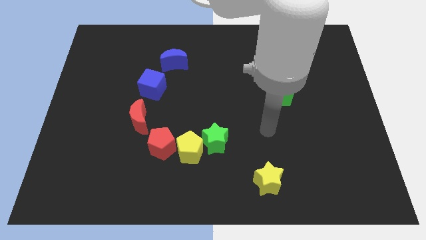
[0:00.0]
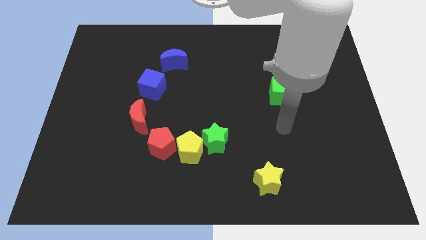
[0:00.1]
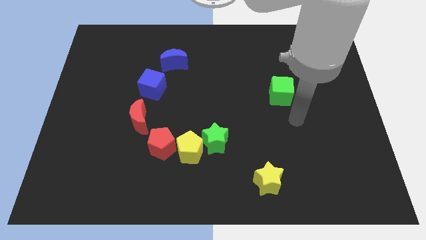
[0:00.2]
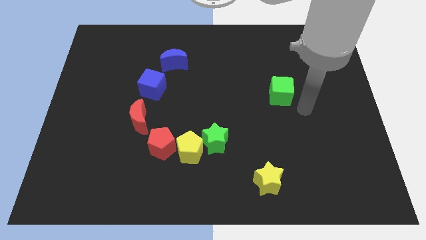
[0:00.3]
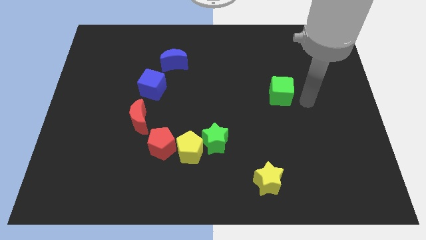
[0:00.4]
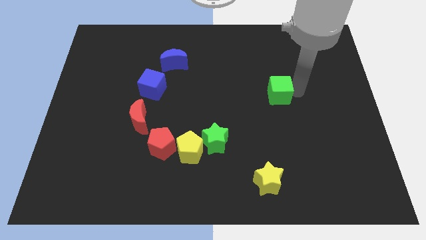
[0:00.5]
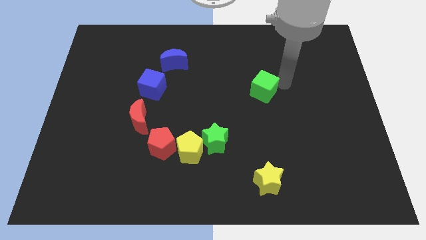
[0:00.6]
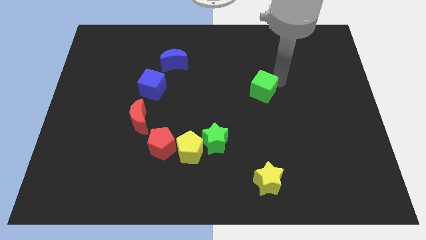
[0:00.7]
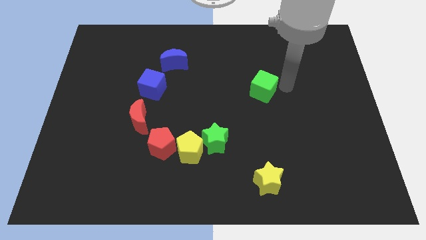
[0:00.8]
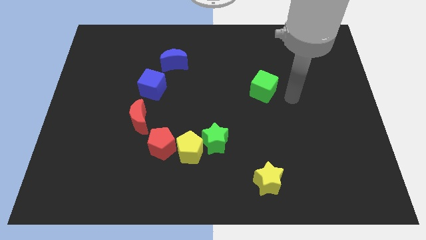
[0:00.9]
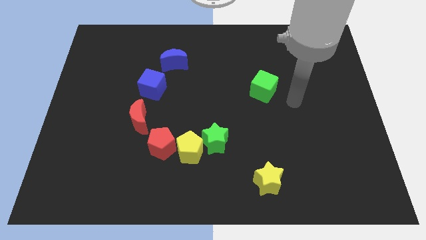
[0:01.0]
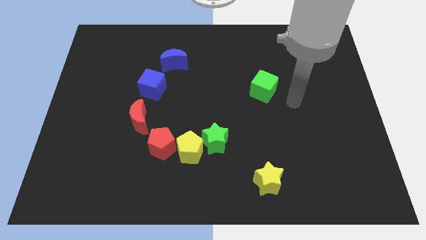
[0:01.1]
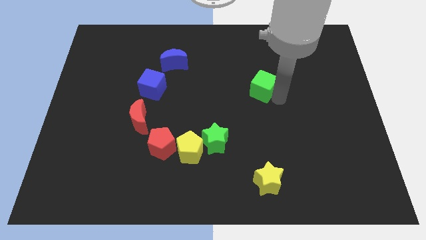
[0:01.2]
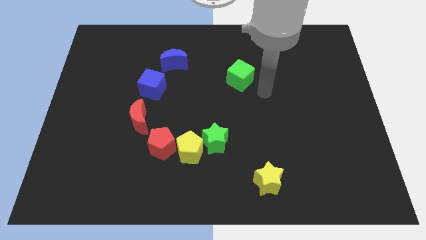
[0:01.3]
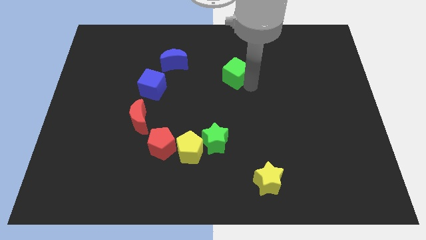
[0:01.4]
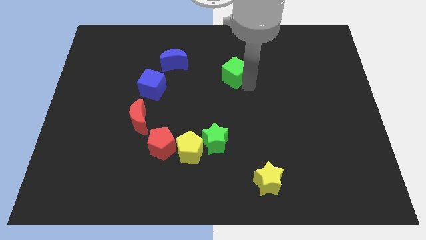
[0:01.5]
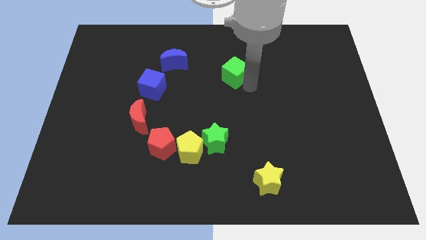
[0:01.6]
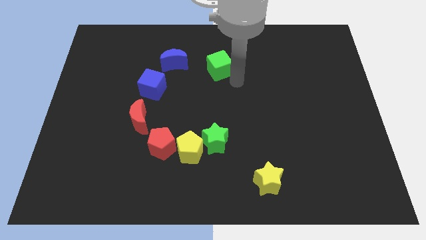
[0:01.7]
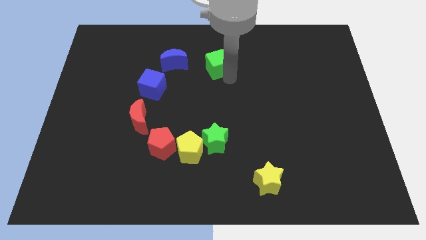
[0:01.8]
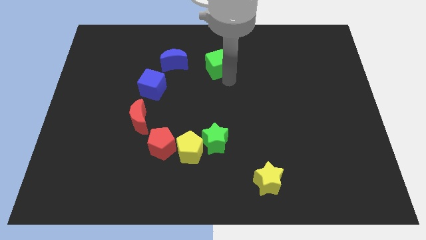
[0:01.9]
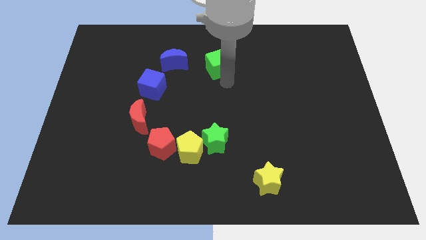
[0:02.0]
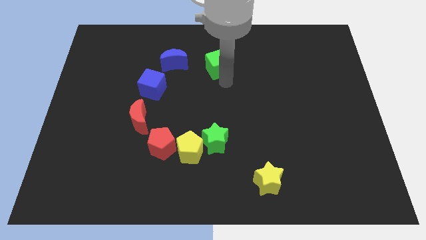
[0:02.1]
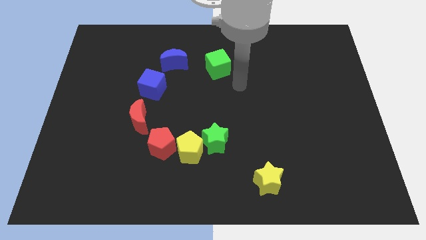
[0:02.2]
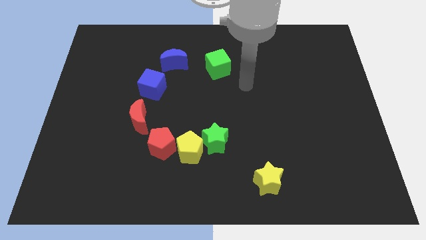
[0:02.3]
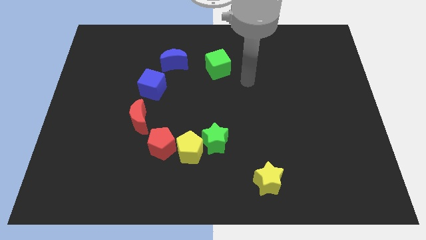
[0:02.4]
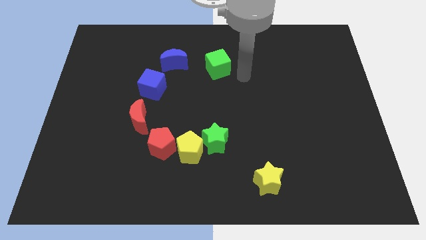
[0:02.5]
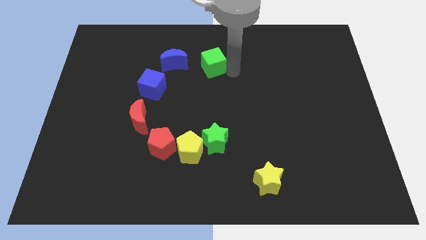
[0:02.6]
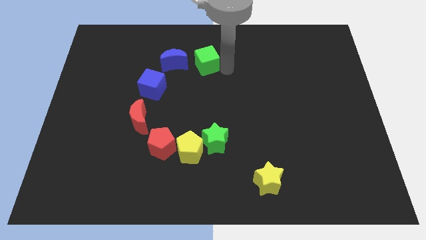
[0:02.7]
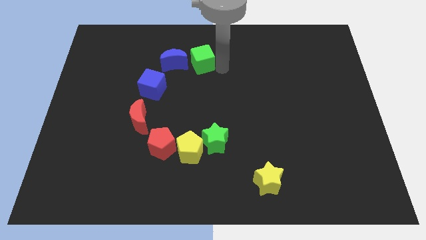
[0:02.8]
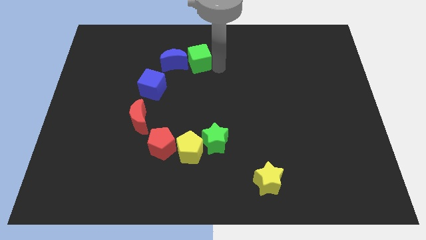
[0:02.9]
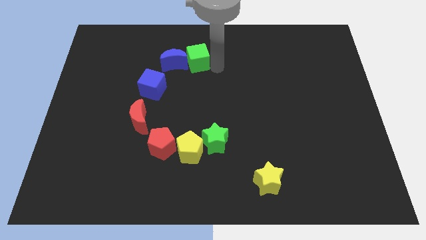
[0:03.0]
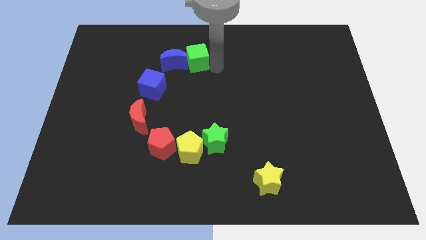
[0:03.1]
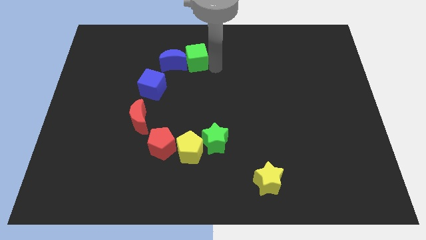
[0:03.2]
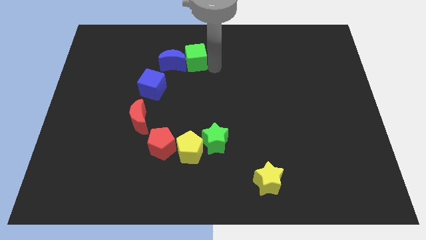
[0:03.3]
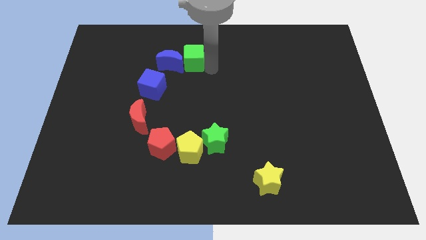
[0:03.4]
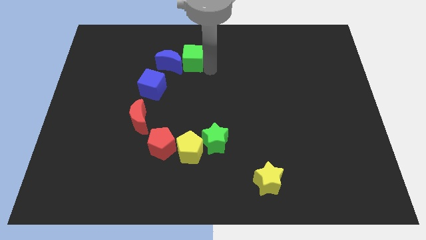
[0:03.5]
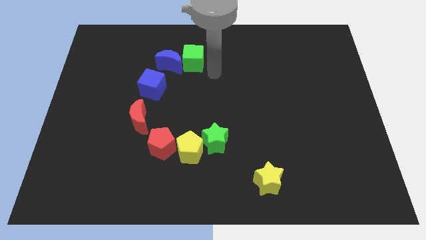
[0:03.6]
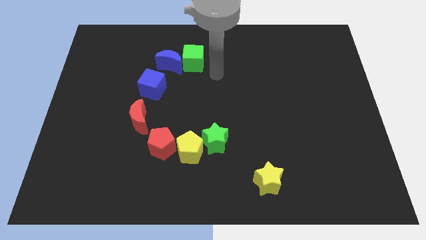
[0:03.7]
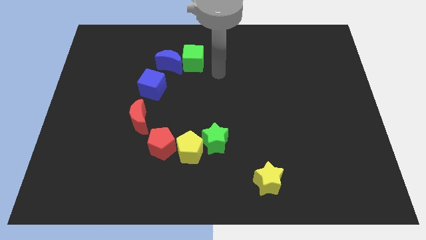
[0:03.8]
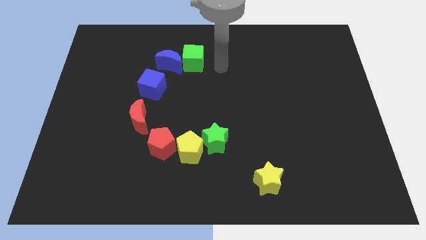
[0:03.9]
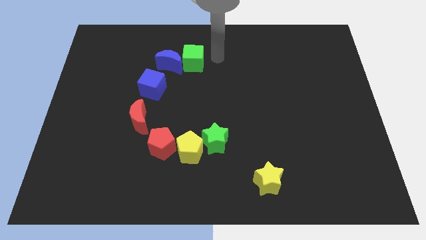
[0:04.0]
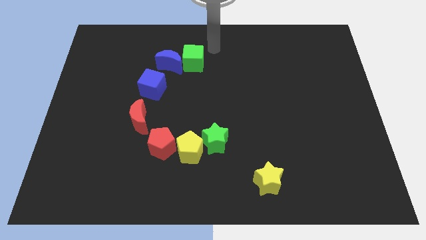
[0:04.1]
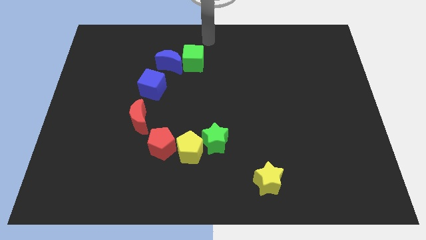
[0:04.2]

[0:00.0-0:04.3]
push the green cube into the blue moon

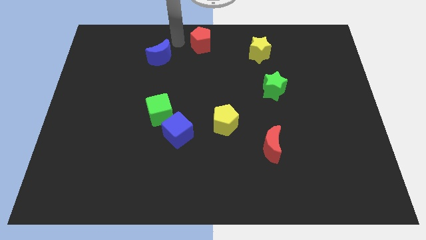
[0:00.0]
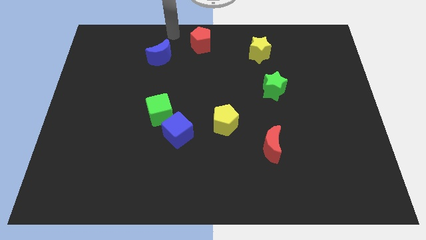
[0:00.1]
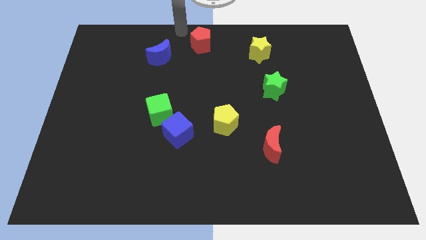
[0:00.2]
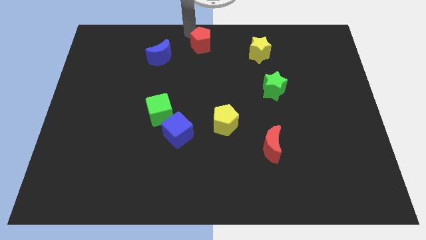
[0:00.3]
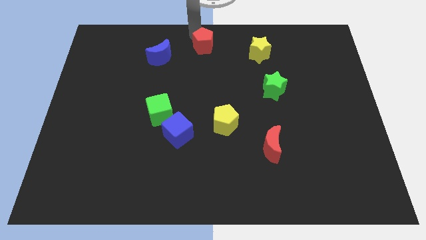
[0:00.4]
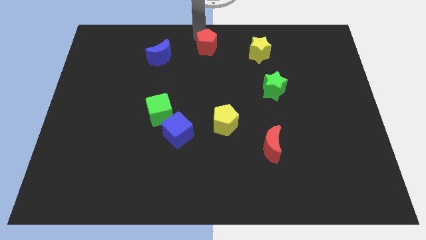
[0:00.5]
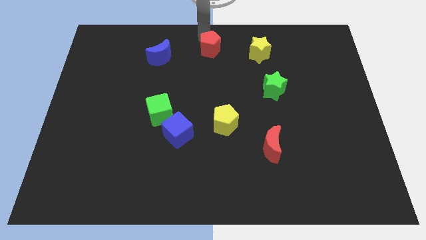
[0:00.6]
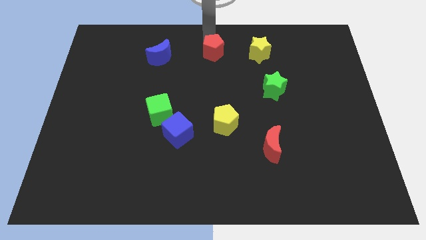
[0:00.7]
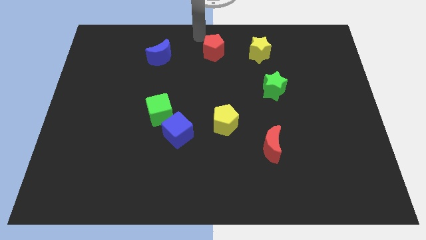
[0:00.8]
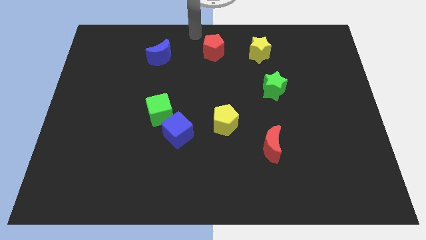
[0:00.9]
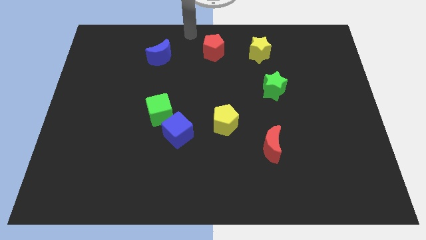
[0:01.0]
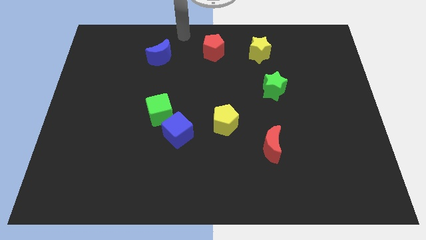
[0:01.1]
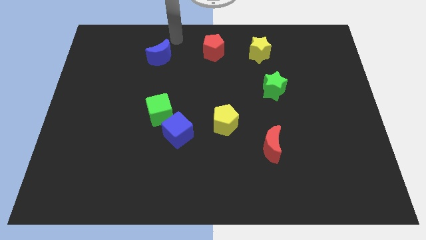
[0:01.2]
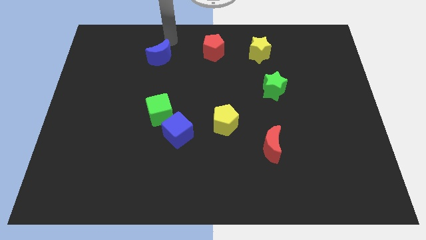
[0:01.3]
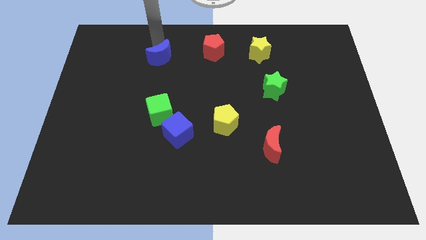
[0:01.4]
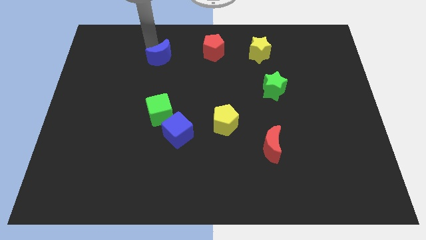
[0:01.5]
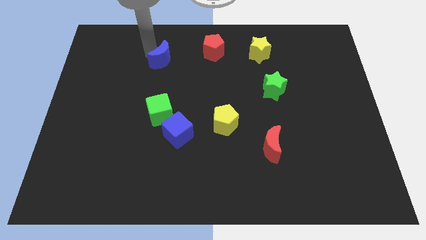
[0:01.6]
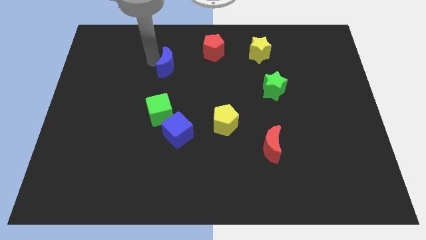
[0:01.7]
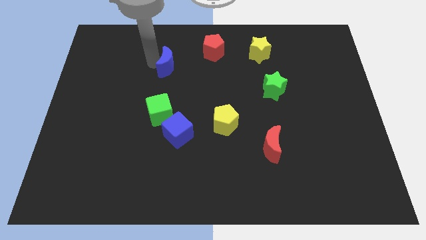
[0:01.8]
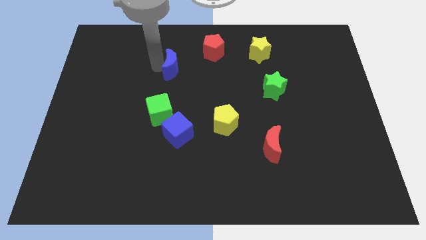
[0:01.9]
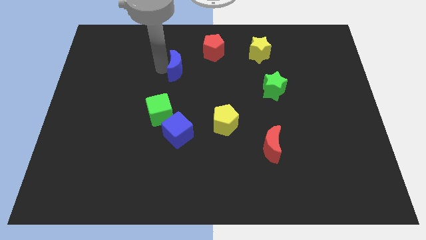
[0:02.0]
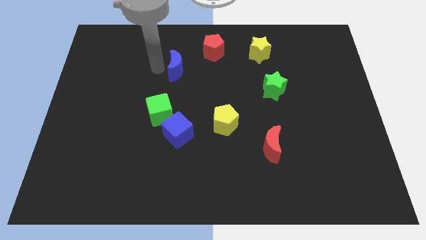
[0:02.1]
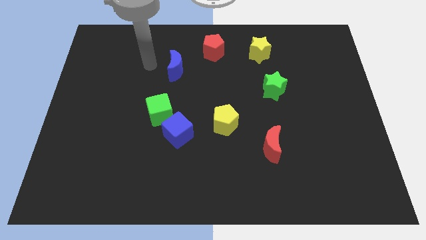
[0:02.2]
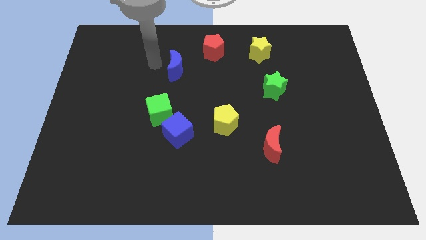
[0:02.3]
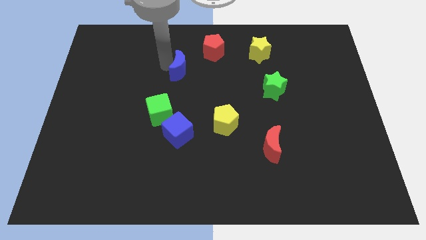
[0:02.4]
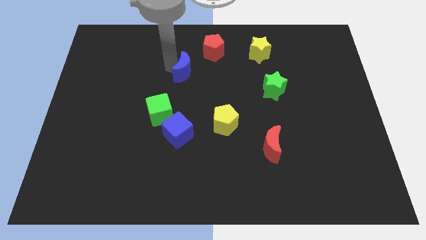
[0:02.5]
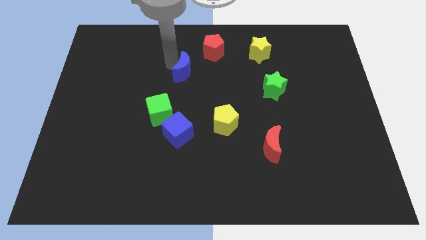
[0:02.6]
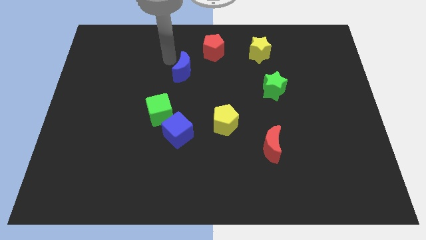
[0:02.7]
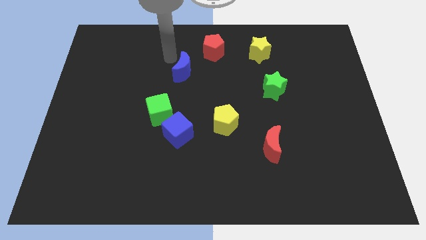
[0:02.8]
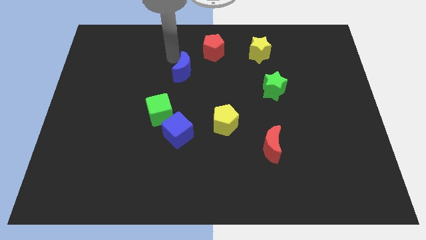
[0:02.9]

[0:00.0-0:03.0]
put the red pentagon to the left of the yellow star

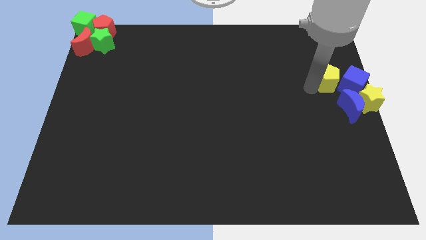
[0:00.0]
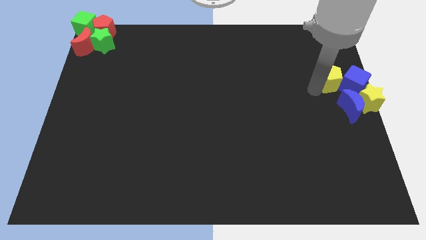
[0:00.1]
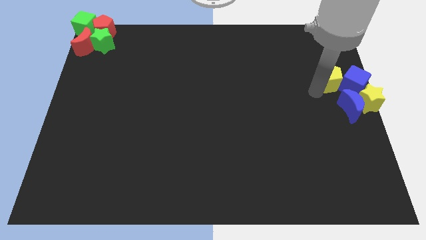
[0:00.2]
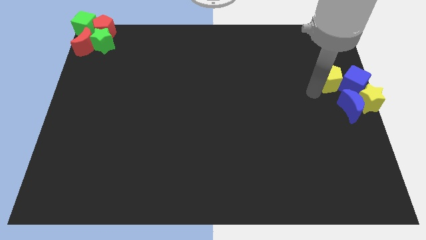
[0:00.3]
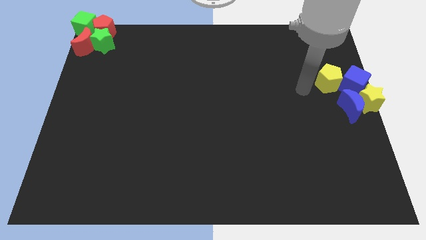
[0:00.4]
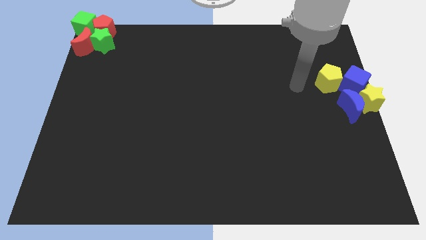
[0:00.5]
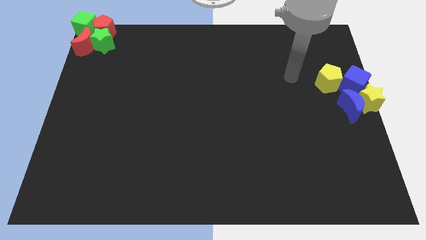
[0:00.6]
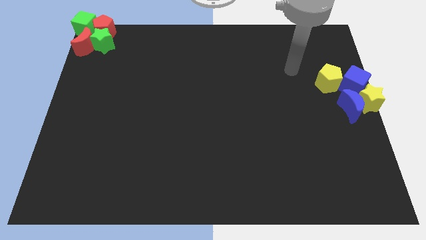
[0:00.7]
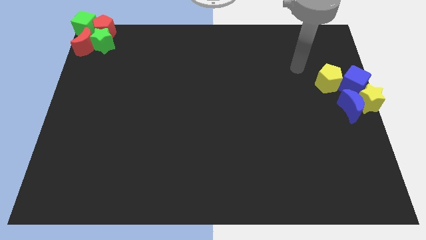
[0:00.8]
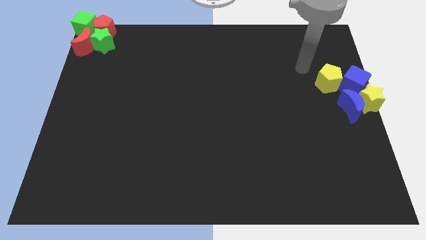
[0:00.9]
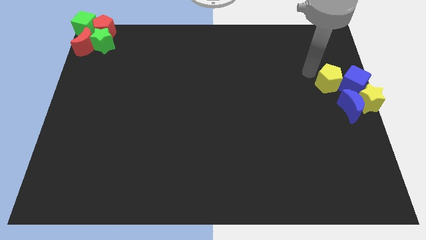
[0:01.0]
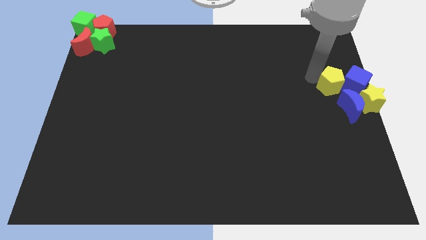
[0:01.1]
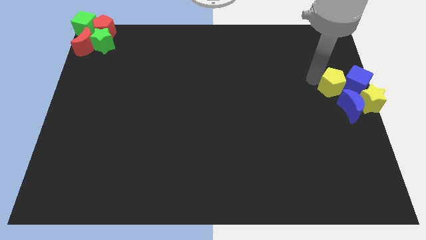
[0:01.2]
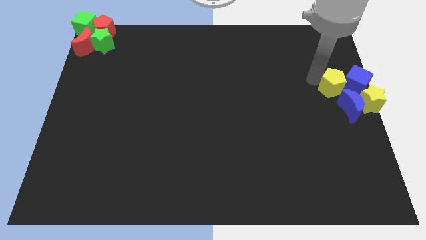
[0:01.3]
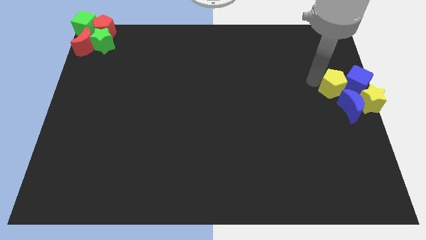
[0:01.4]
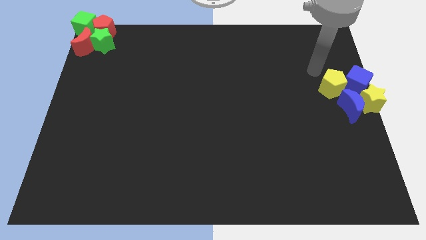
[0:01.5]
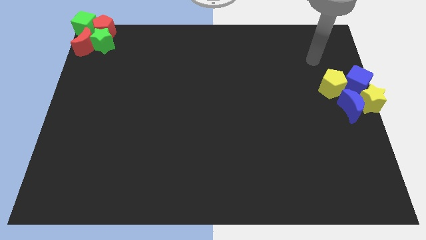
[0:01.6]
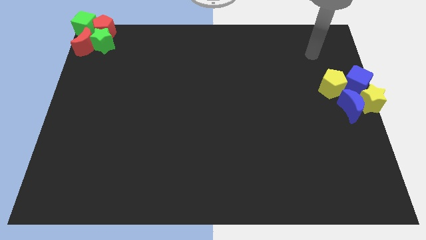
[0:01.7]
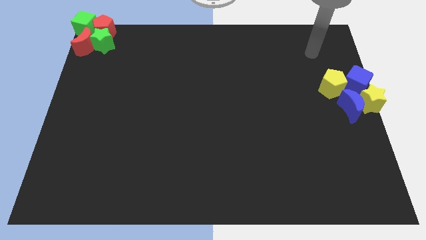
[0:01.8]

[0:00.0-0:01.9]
make a group out of blue and yellow blocks to the right center
